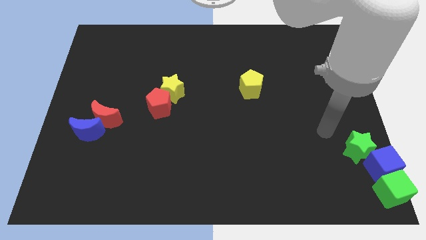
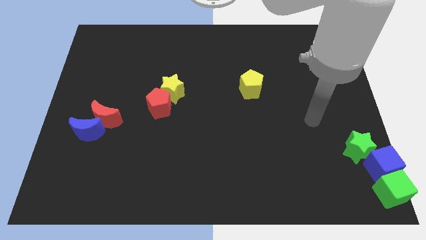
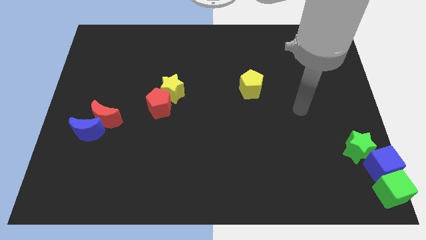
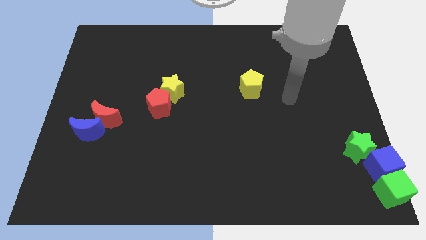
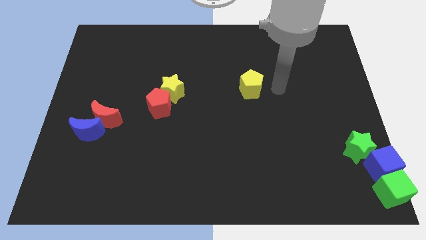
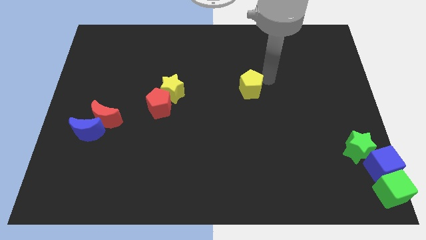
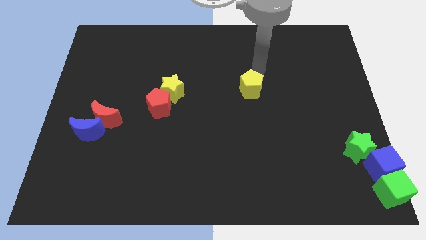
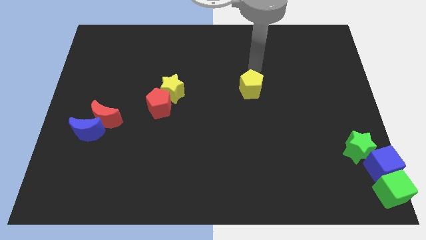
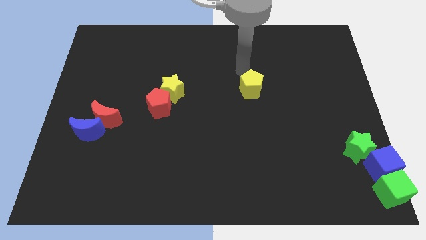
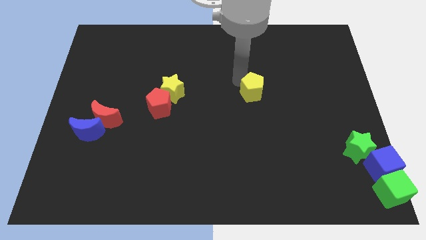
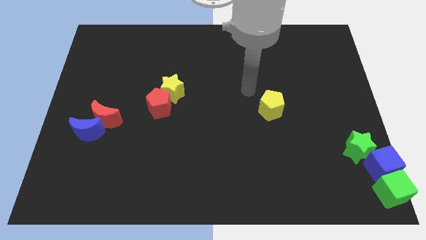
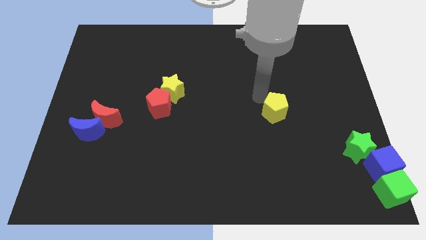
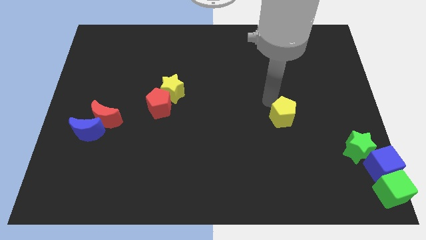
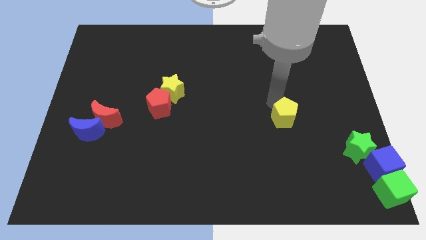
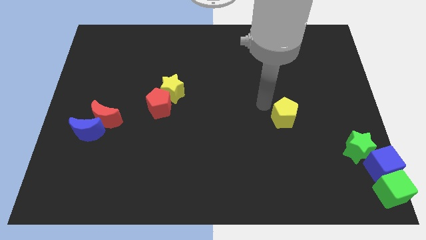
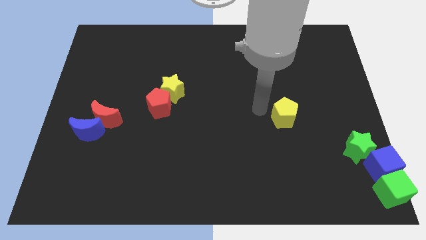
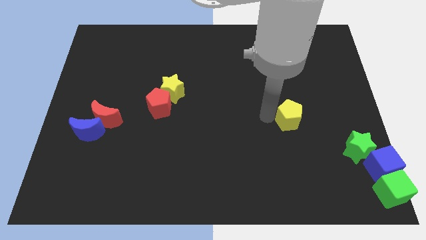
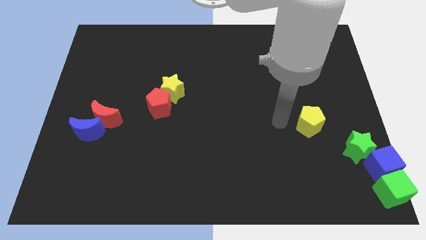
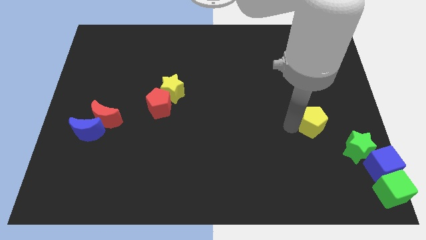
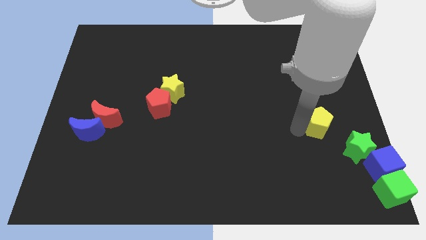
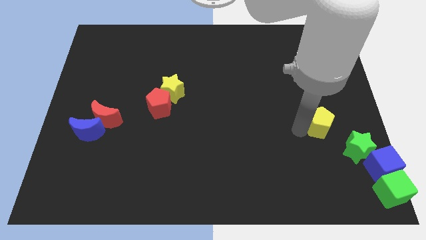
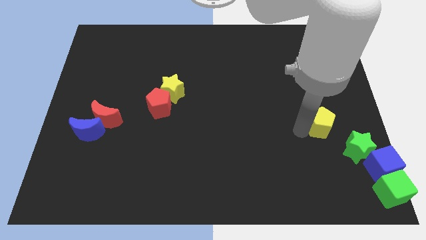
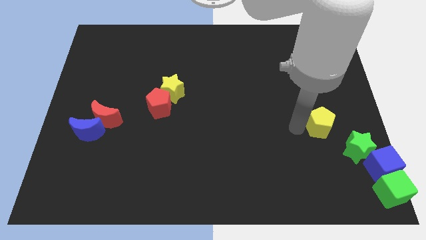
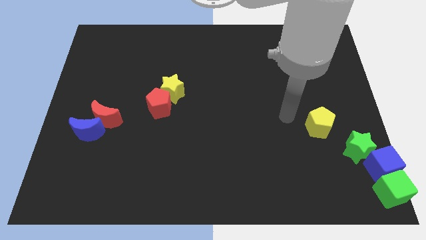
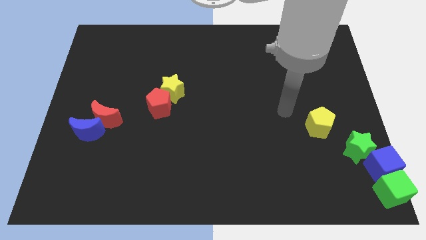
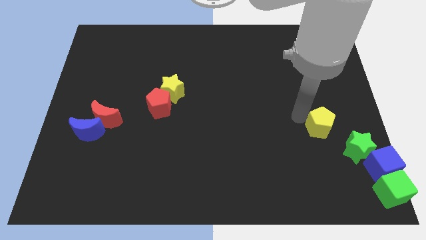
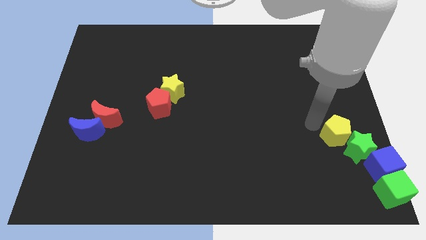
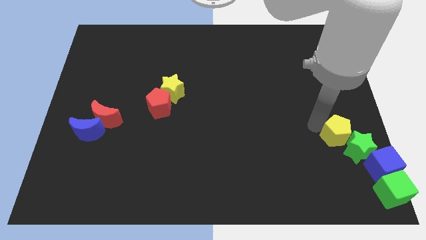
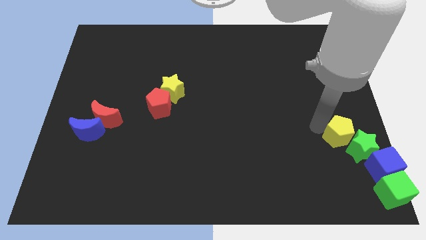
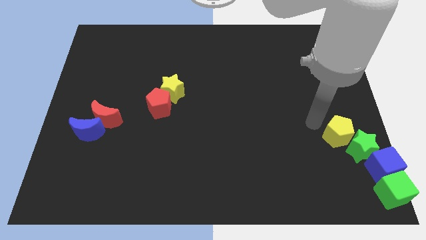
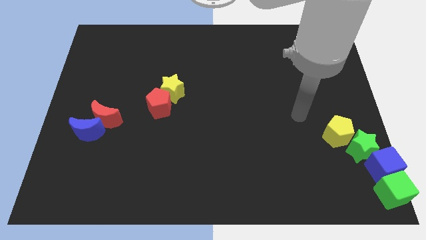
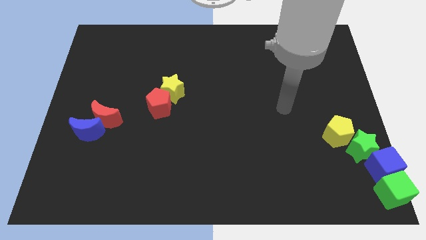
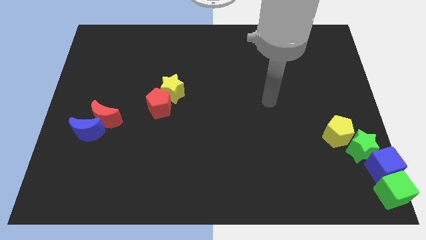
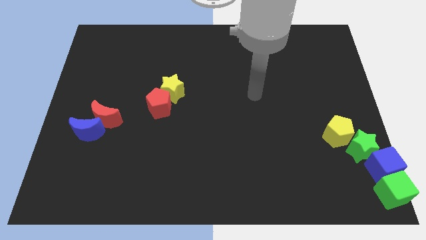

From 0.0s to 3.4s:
push the yellow pentagon to the top left of the green star

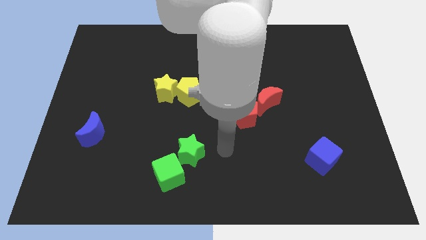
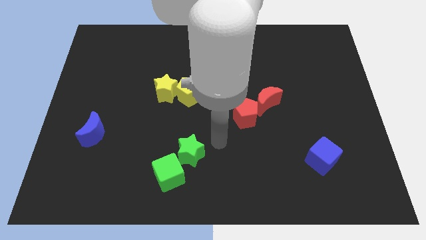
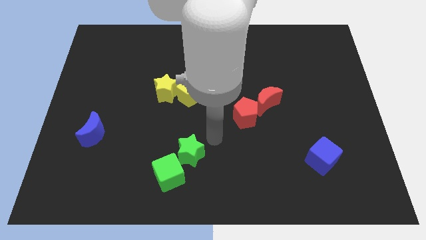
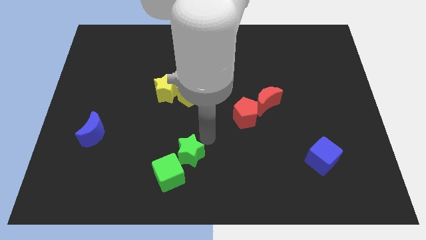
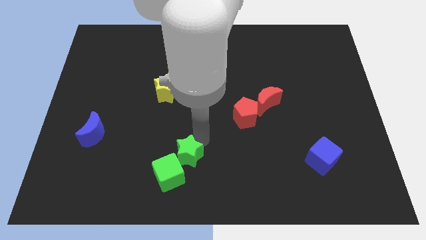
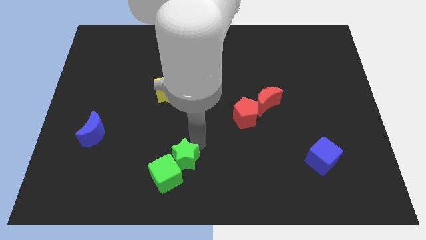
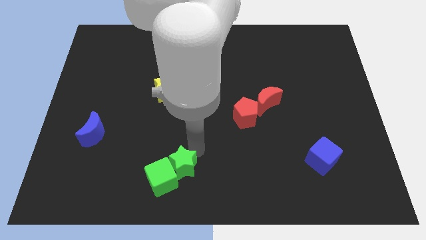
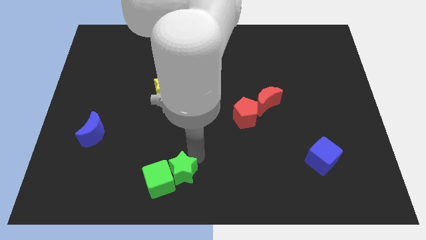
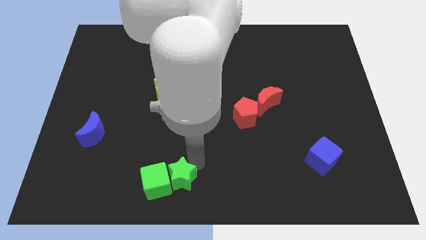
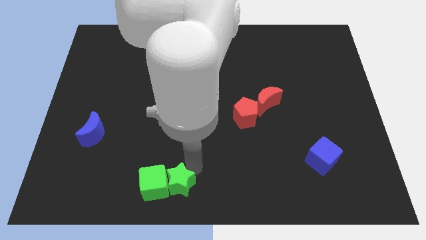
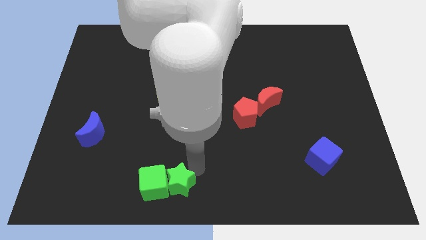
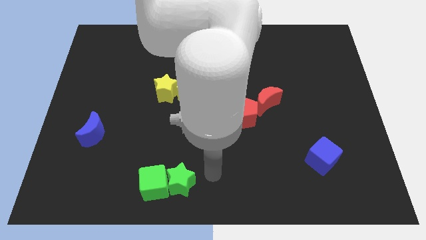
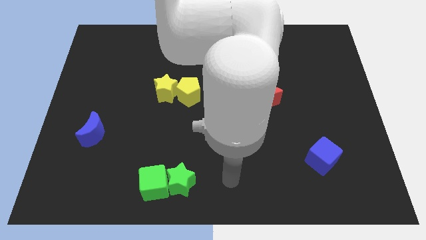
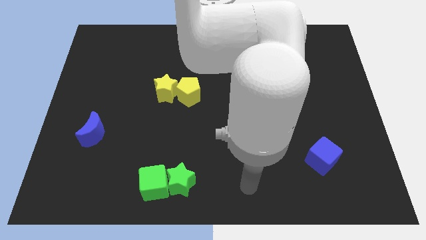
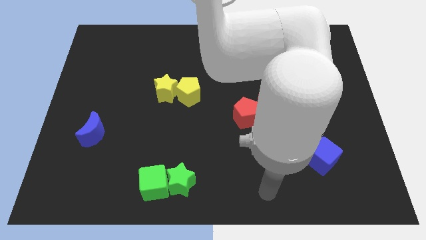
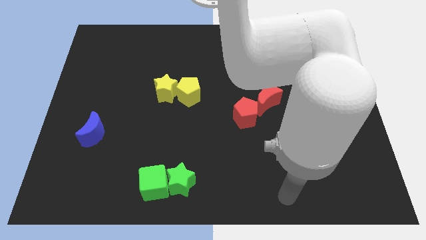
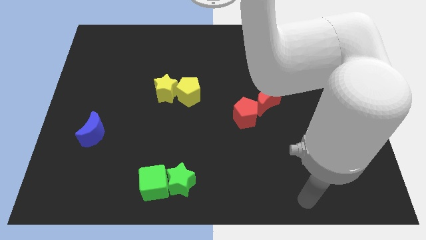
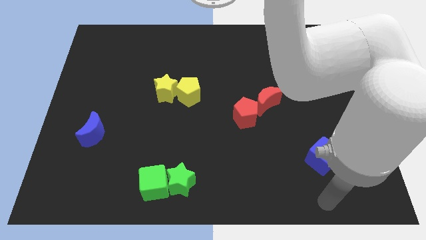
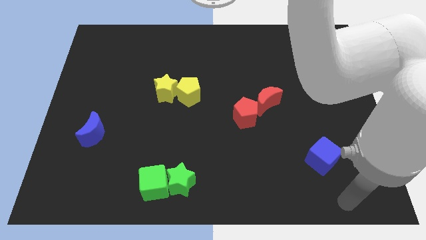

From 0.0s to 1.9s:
drag the green cube green star to the bottom center of the board

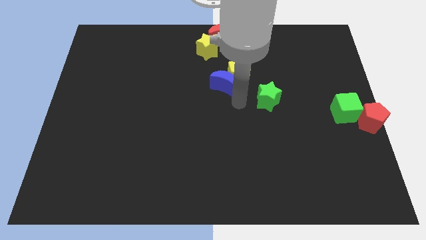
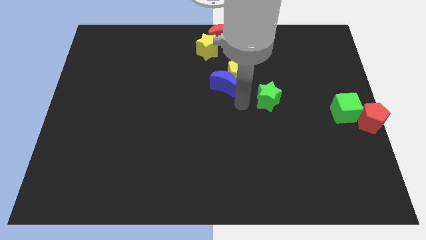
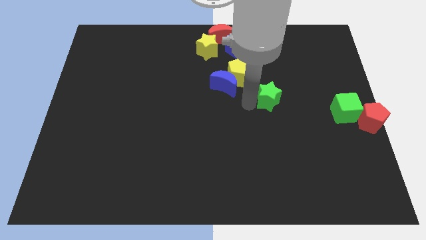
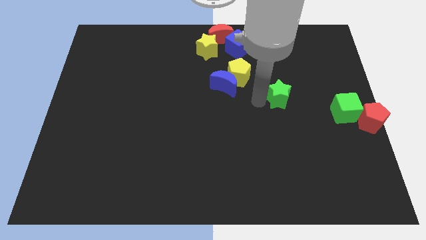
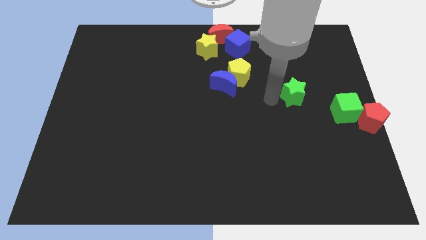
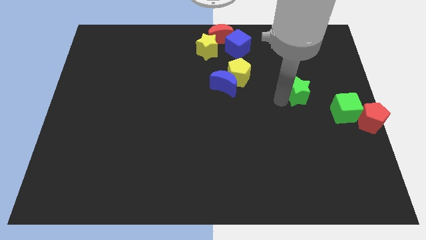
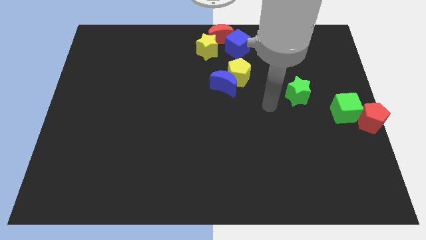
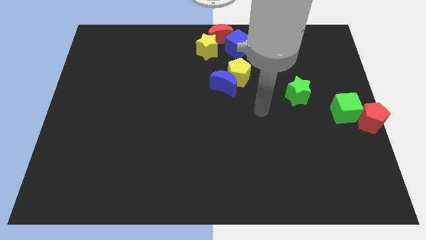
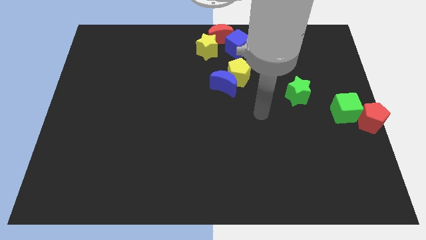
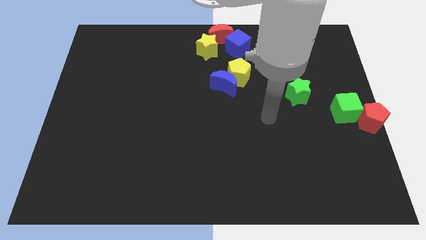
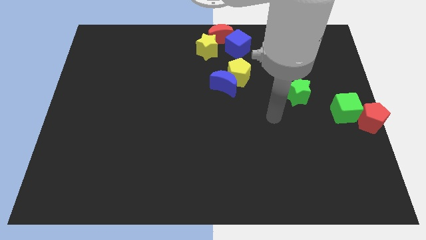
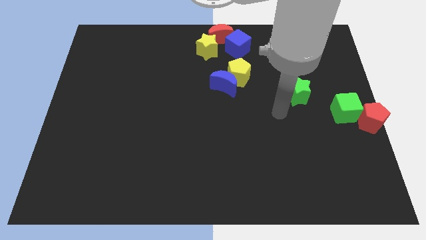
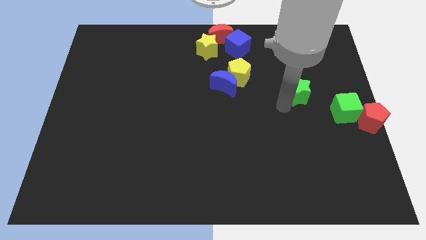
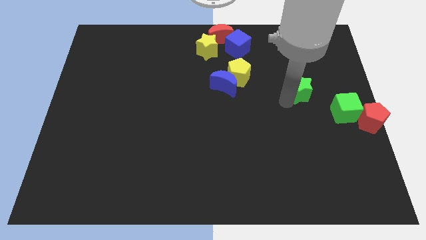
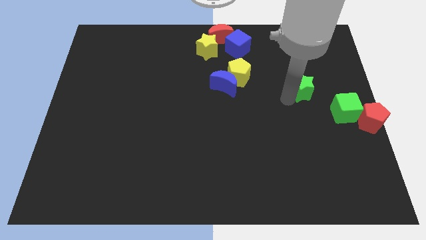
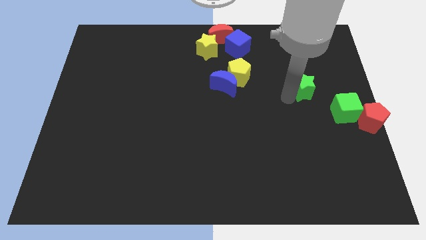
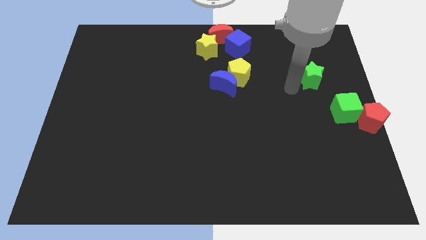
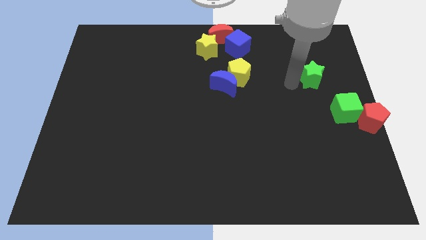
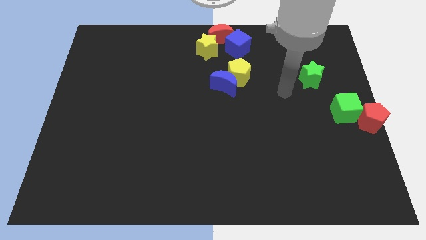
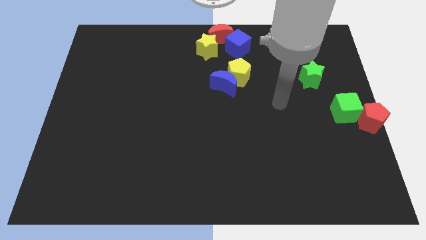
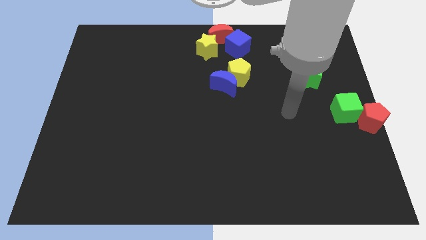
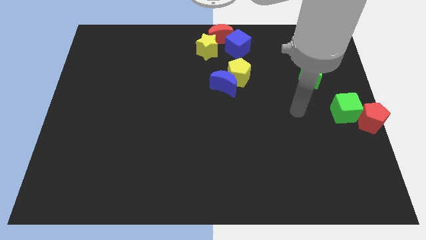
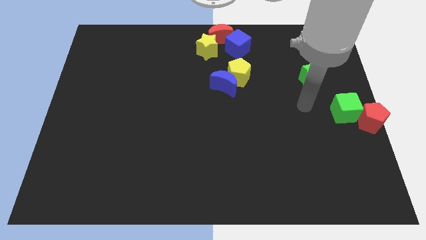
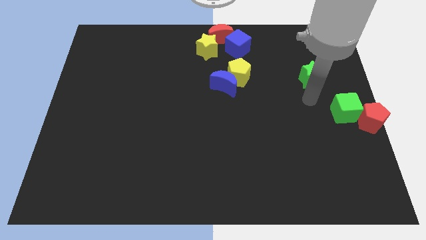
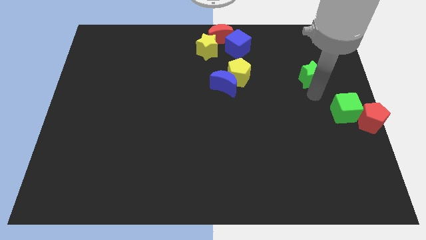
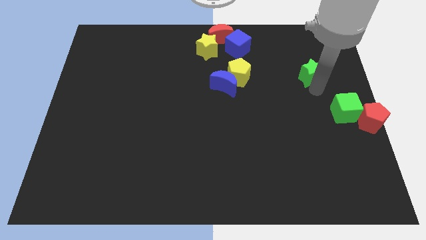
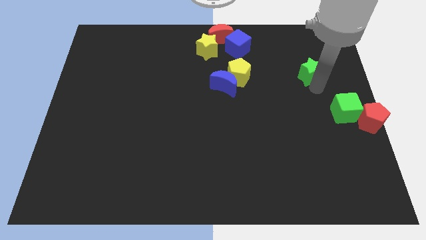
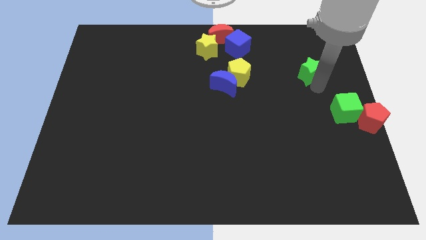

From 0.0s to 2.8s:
push the green star parallel right to the yellow pentagon

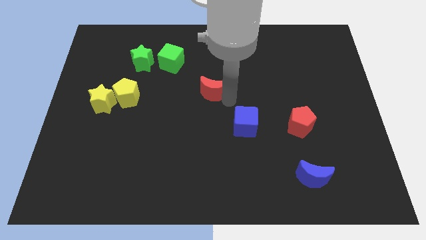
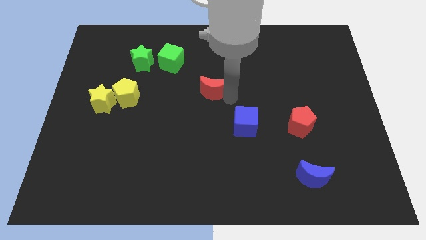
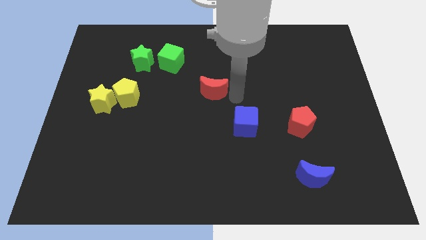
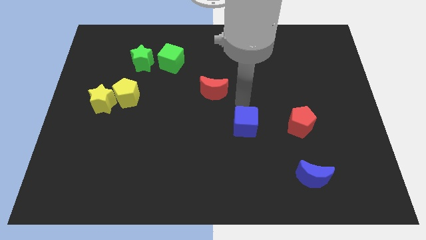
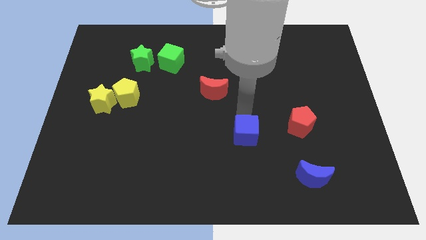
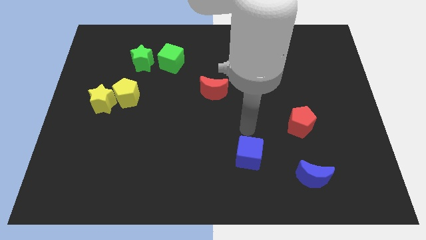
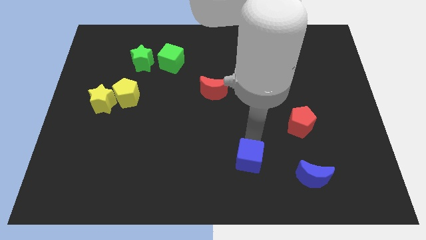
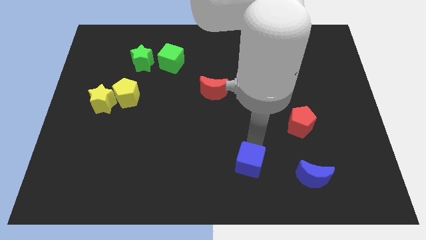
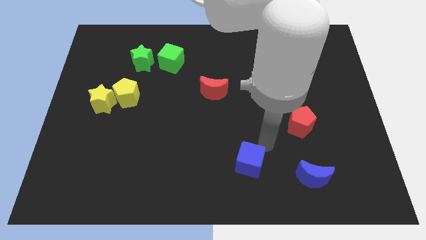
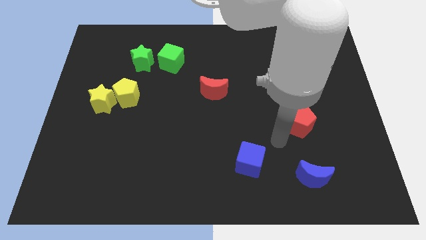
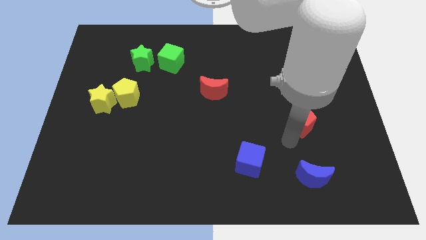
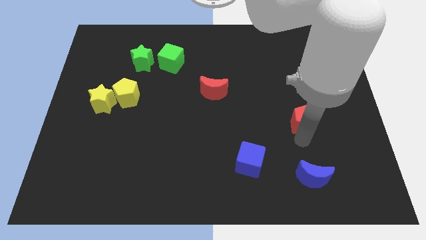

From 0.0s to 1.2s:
push the blue cube slightly downwards
